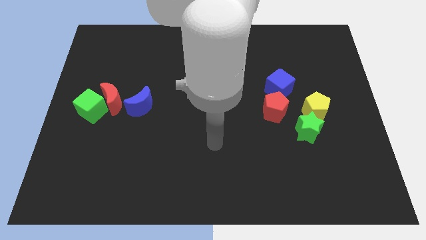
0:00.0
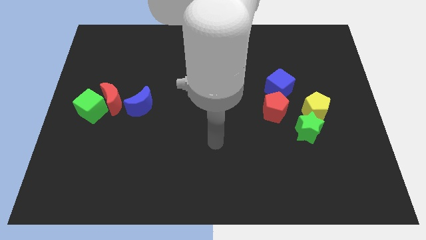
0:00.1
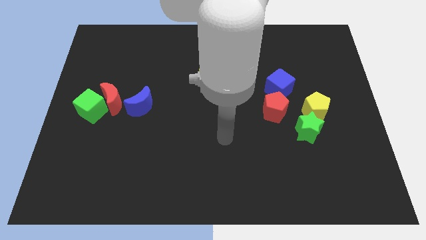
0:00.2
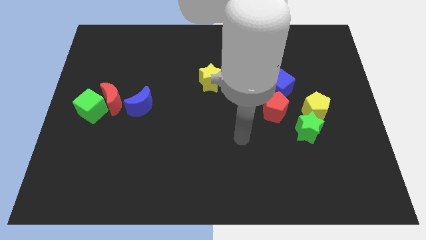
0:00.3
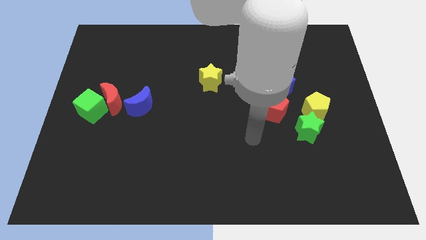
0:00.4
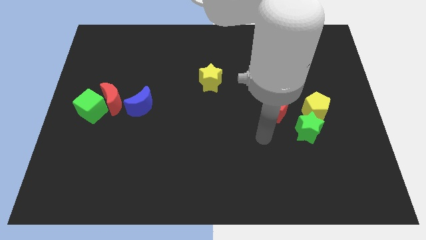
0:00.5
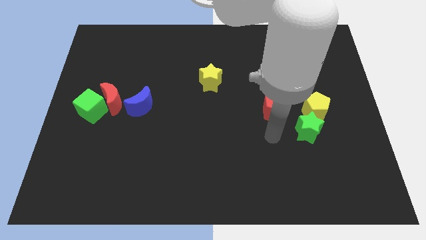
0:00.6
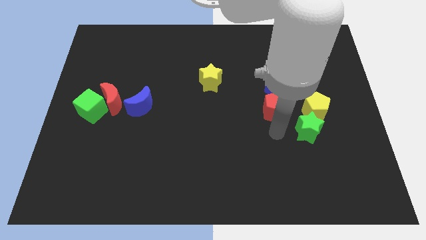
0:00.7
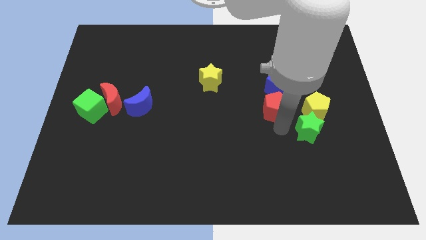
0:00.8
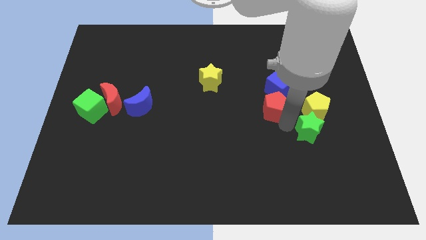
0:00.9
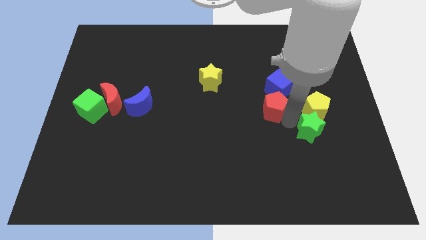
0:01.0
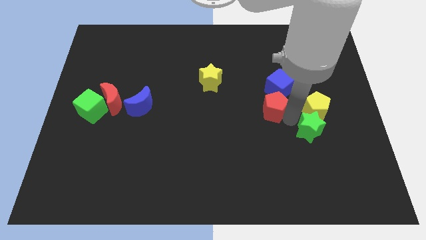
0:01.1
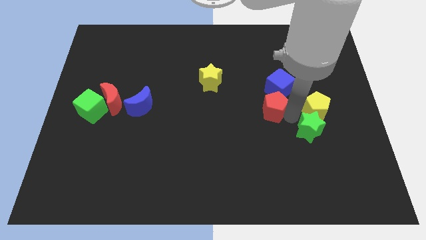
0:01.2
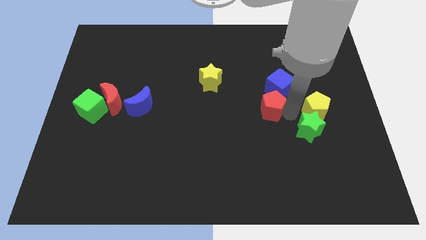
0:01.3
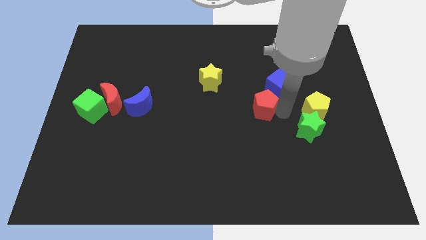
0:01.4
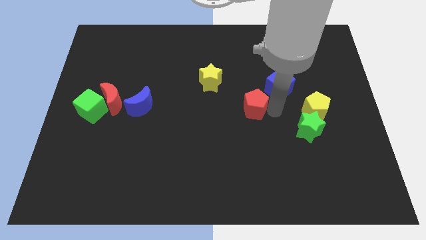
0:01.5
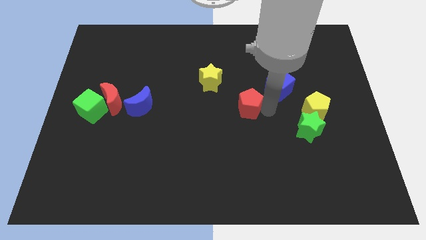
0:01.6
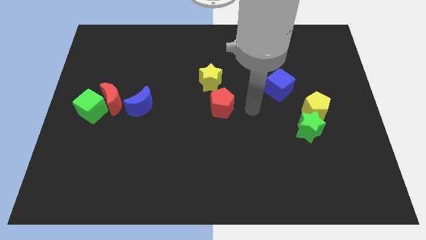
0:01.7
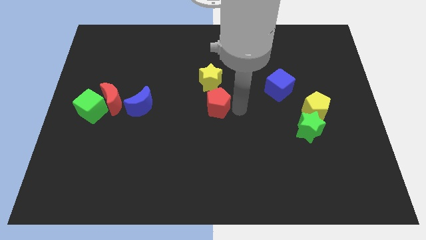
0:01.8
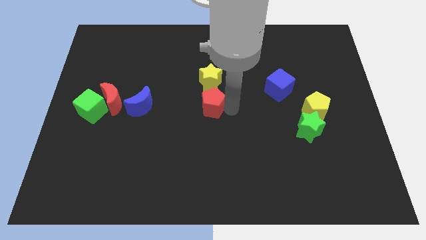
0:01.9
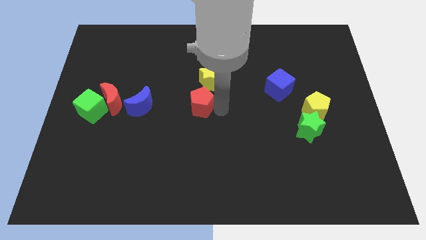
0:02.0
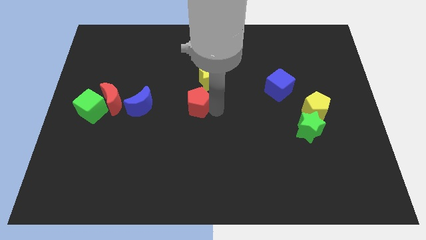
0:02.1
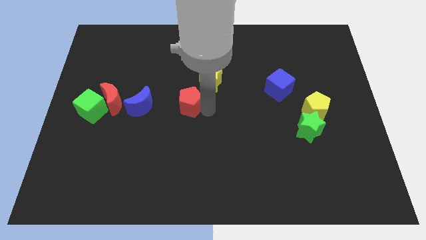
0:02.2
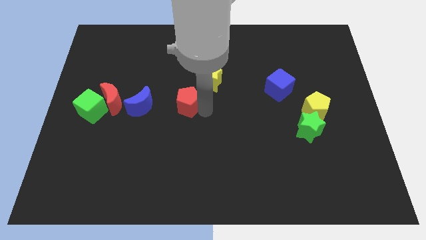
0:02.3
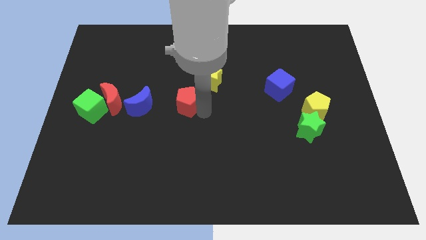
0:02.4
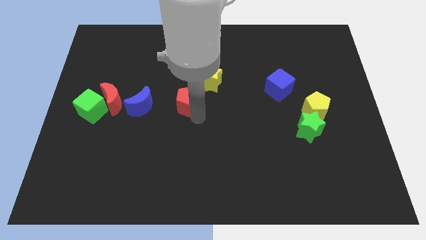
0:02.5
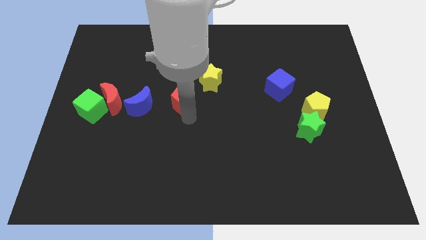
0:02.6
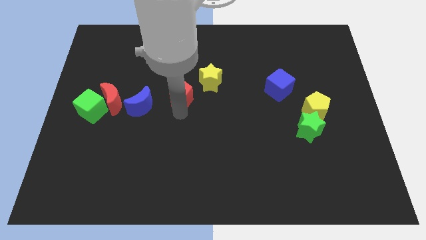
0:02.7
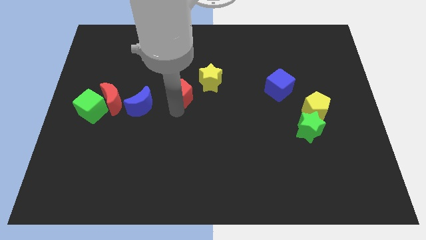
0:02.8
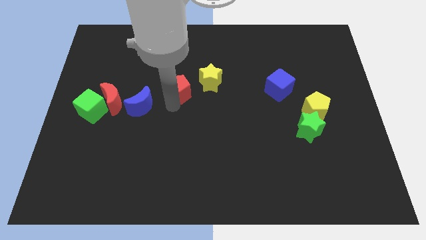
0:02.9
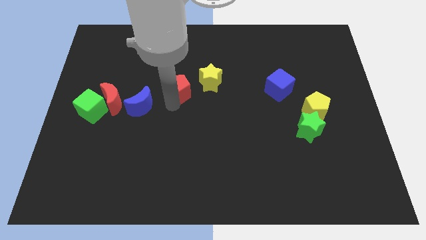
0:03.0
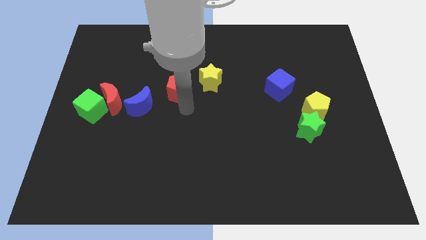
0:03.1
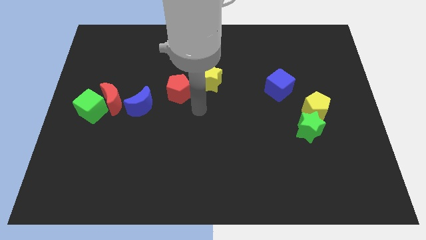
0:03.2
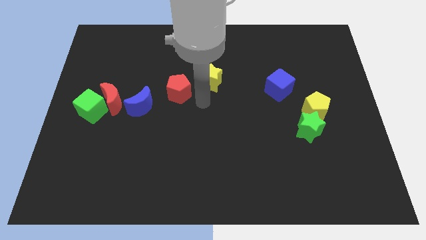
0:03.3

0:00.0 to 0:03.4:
put the red pentagon between the blue moon and yellow star

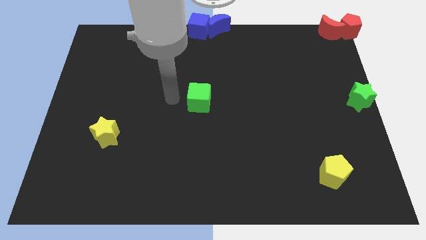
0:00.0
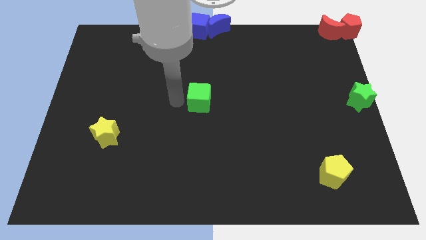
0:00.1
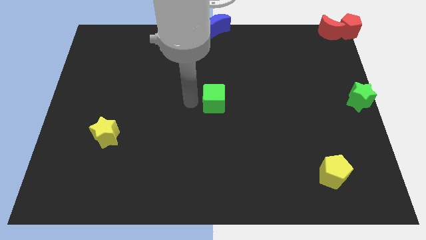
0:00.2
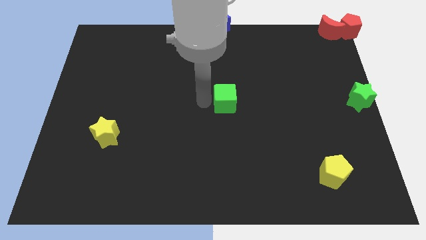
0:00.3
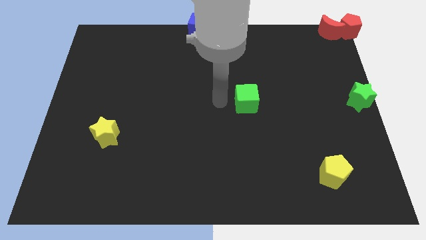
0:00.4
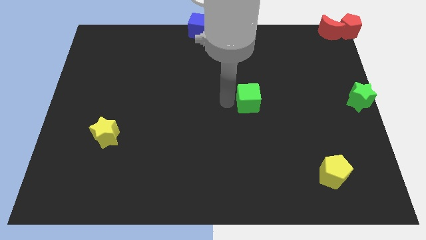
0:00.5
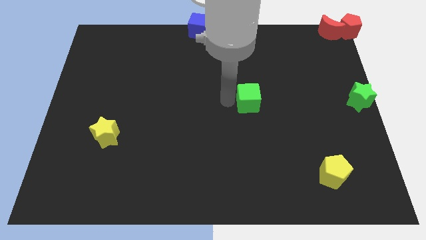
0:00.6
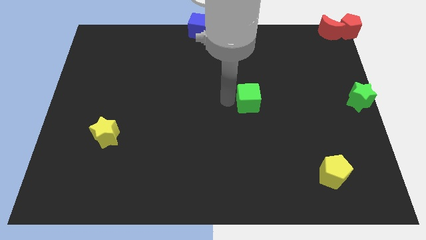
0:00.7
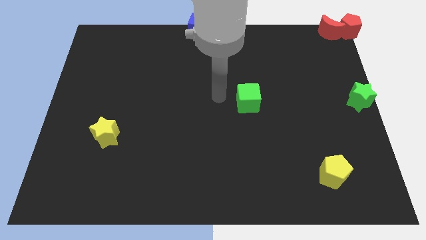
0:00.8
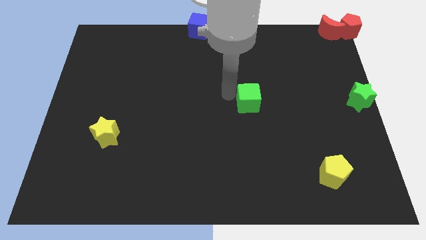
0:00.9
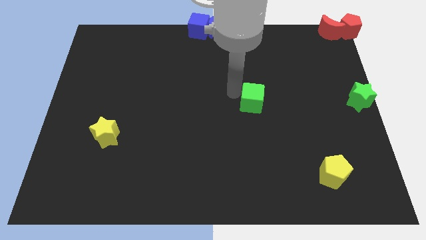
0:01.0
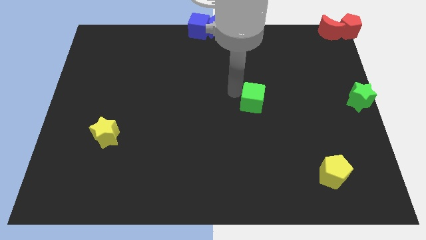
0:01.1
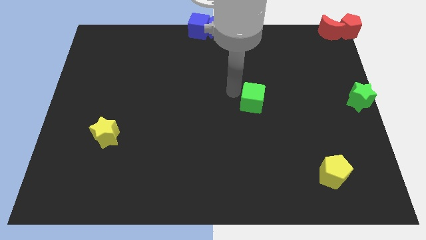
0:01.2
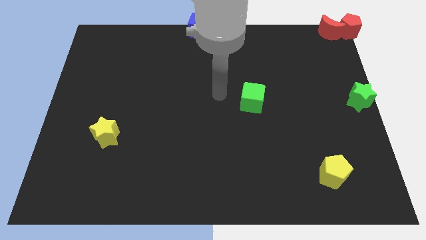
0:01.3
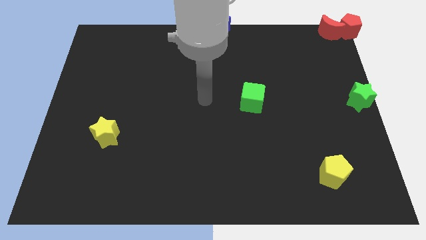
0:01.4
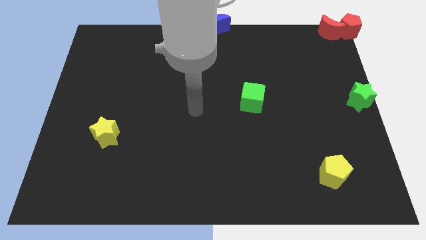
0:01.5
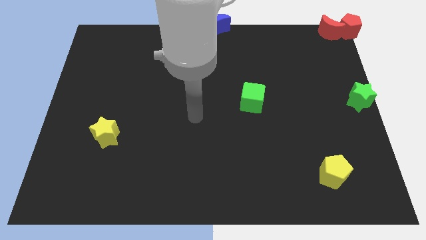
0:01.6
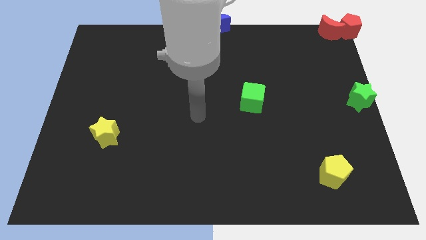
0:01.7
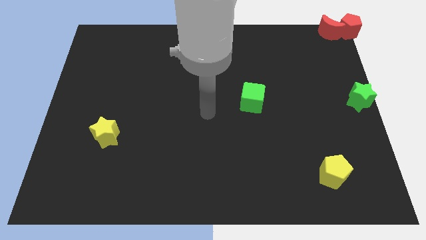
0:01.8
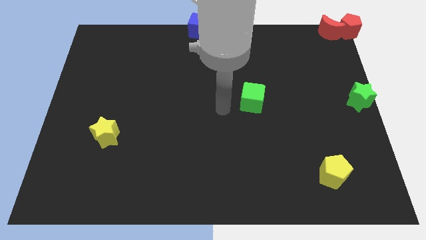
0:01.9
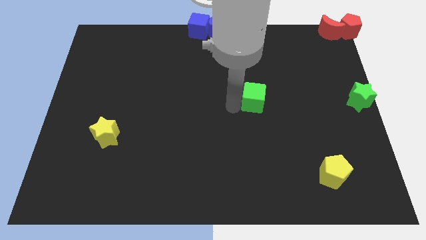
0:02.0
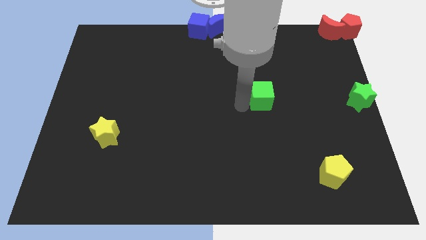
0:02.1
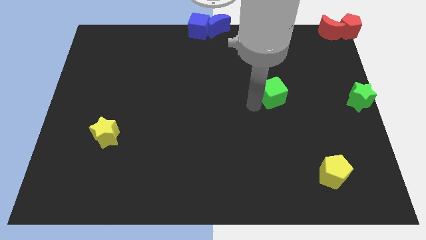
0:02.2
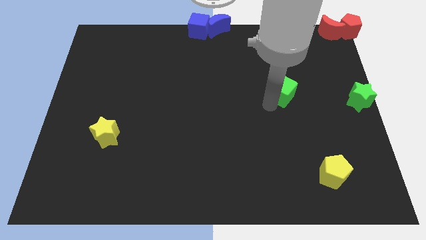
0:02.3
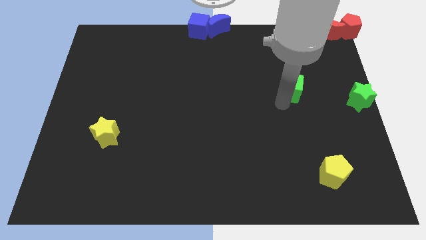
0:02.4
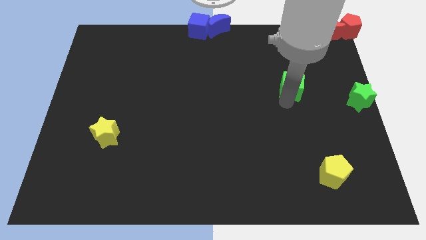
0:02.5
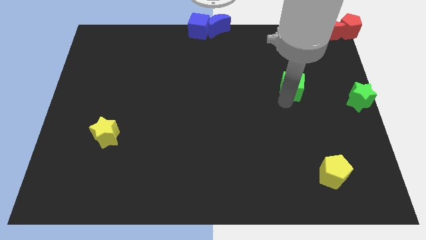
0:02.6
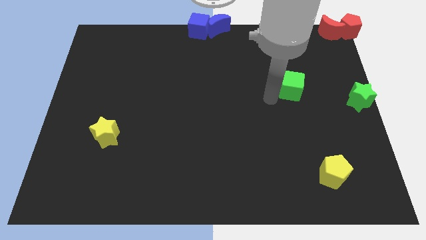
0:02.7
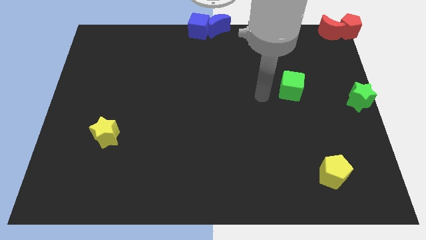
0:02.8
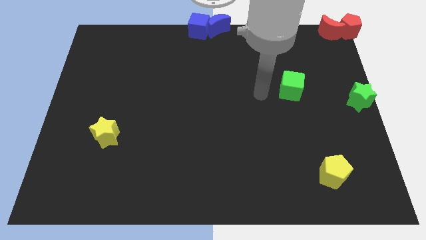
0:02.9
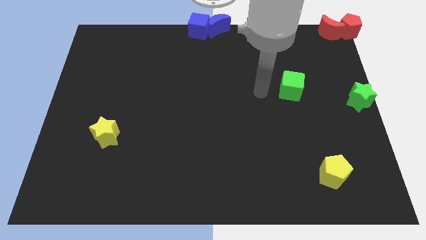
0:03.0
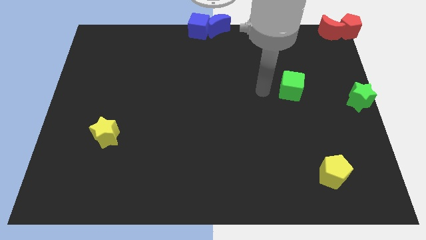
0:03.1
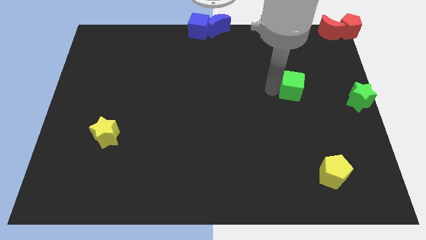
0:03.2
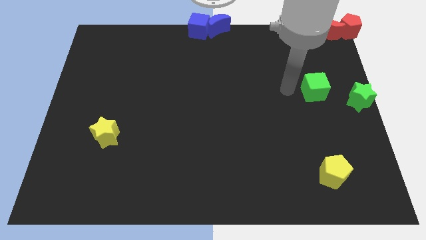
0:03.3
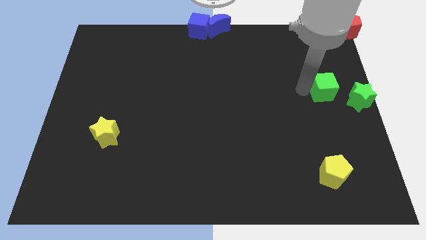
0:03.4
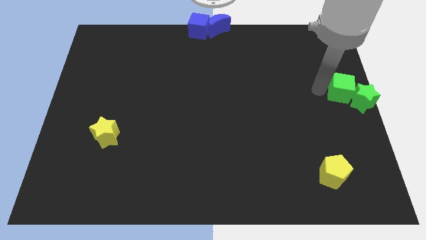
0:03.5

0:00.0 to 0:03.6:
move the green cube into green star

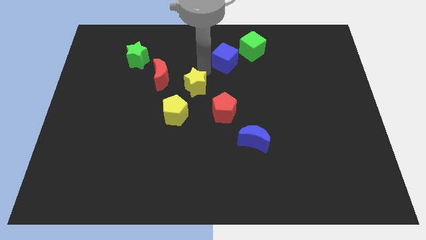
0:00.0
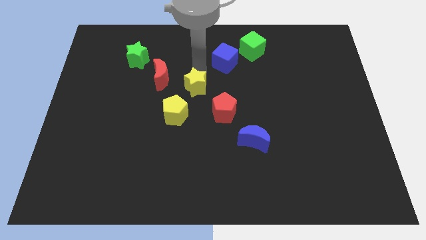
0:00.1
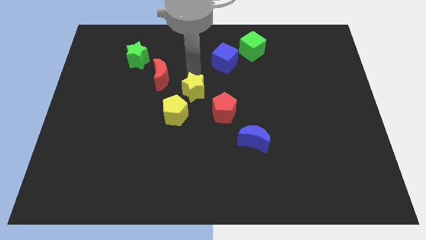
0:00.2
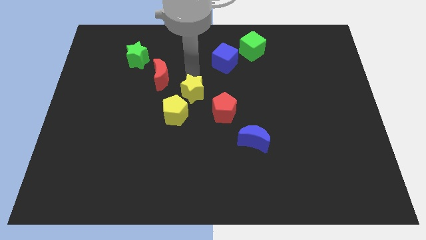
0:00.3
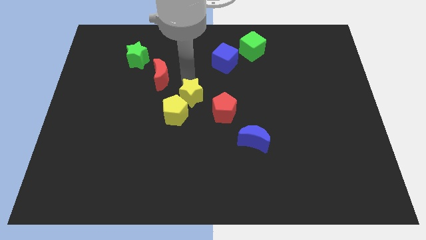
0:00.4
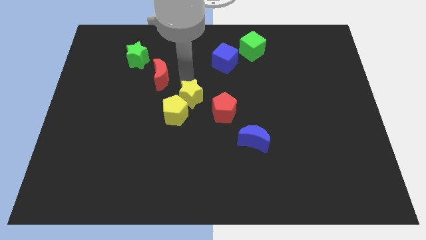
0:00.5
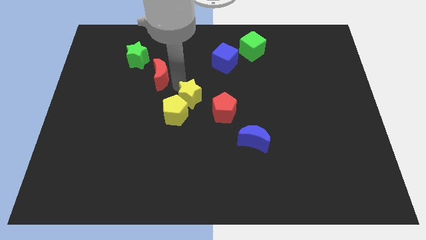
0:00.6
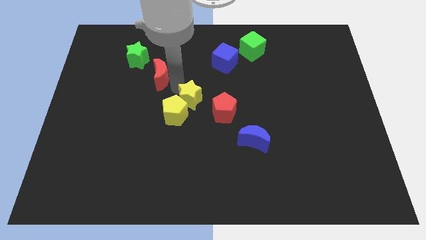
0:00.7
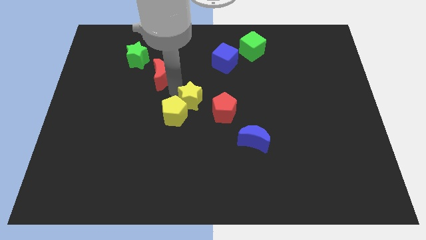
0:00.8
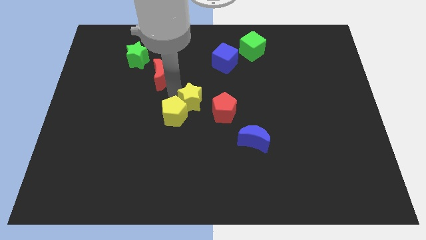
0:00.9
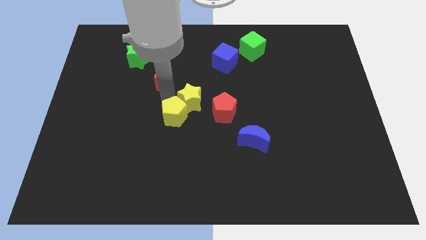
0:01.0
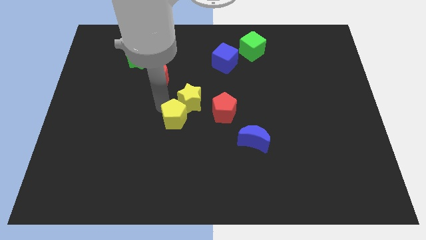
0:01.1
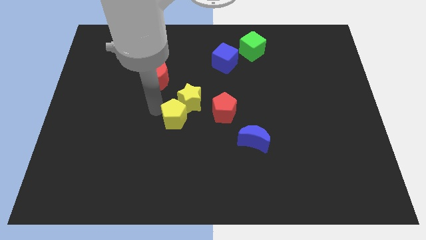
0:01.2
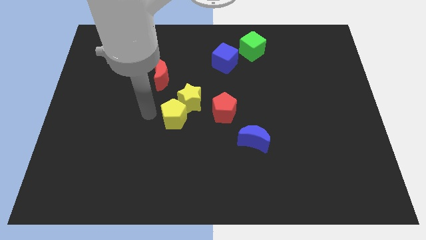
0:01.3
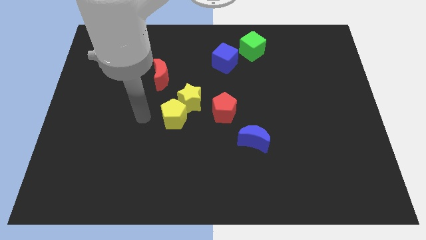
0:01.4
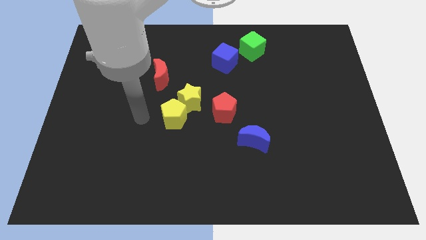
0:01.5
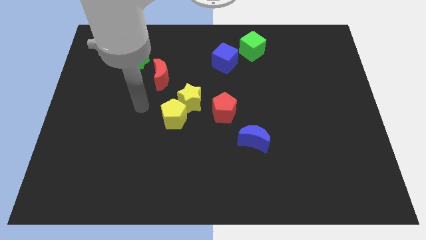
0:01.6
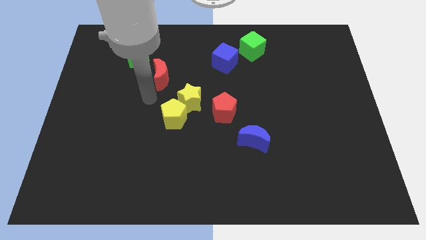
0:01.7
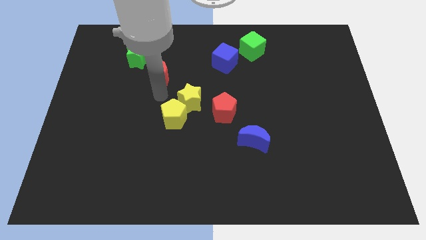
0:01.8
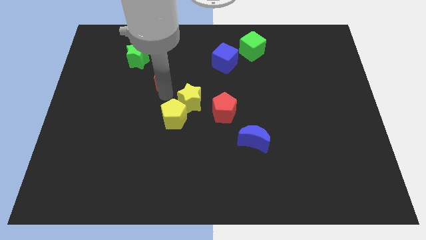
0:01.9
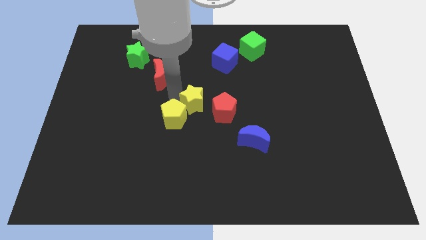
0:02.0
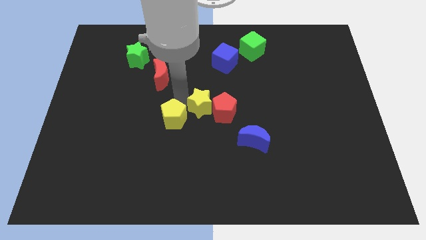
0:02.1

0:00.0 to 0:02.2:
touch the yellow blocks

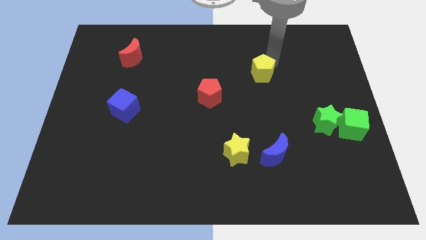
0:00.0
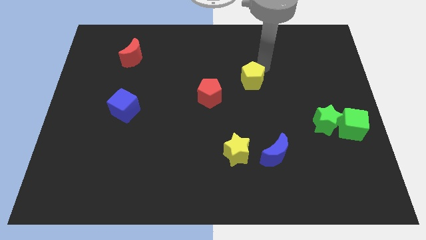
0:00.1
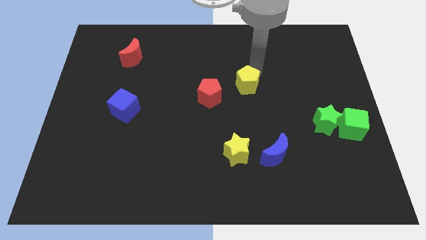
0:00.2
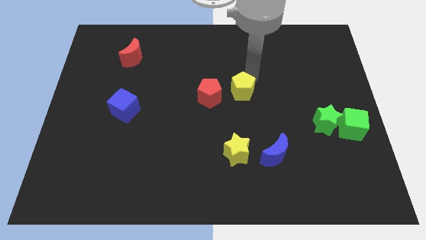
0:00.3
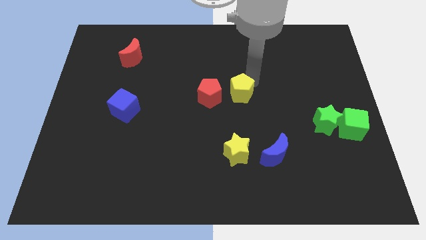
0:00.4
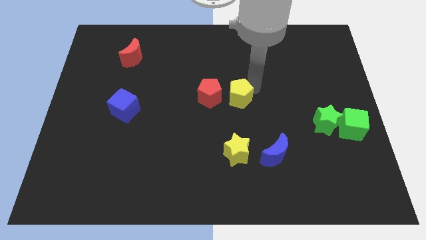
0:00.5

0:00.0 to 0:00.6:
place the yellow pentagon above the yellow star
